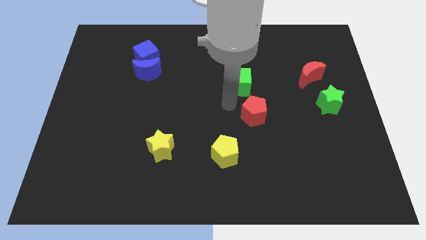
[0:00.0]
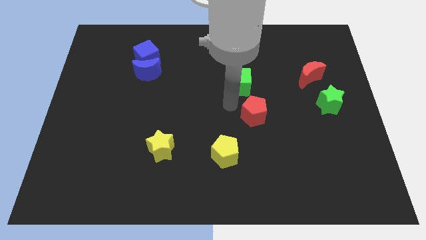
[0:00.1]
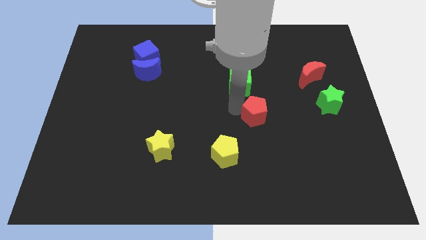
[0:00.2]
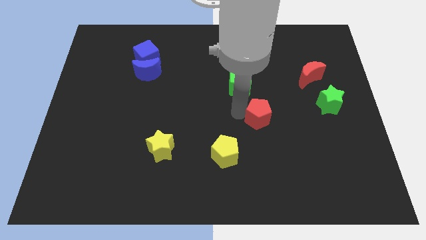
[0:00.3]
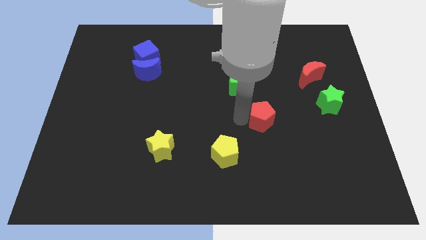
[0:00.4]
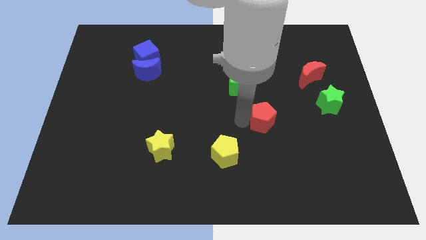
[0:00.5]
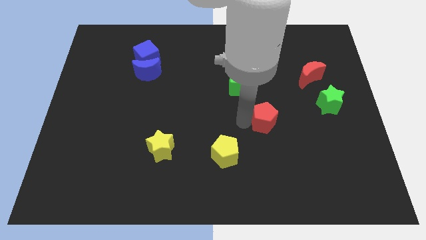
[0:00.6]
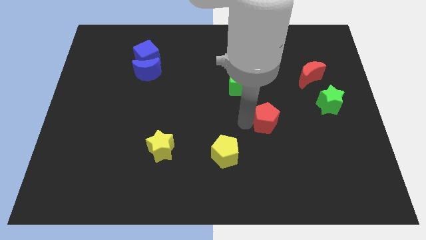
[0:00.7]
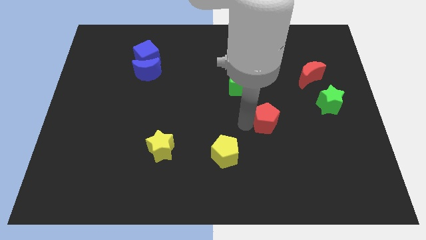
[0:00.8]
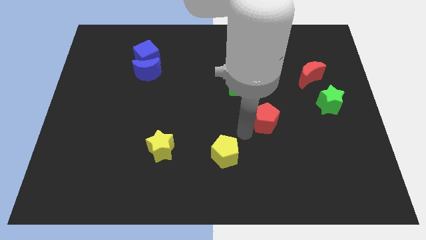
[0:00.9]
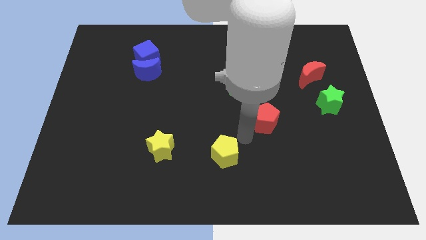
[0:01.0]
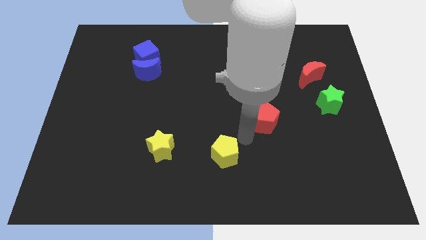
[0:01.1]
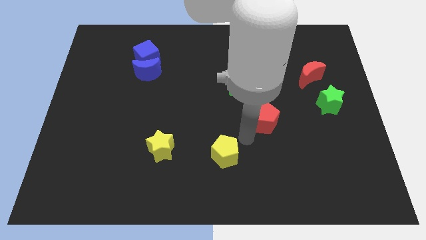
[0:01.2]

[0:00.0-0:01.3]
place the red pentagon diagonal to the yellow pentagon

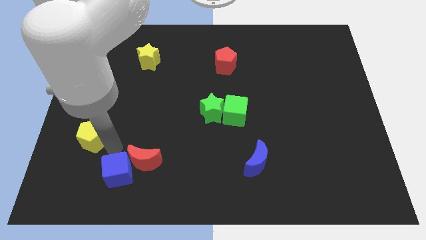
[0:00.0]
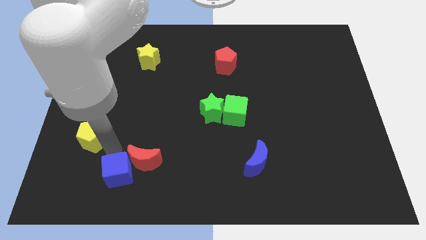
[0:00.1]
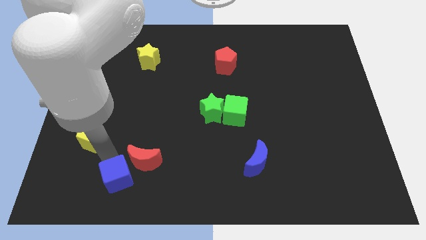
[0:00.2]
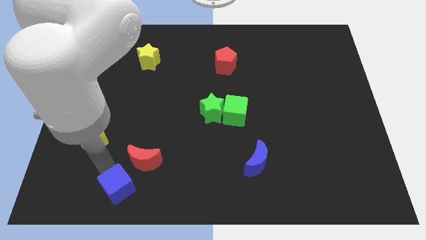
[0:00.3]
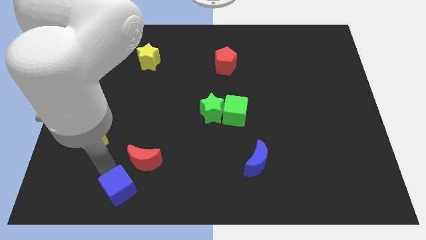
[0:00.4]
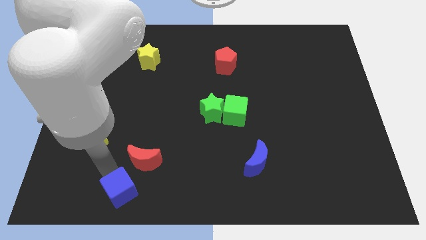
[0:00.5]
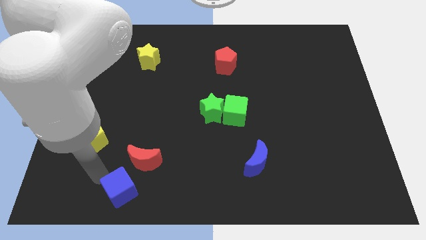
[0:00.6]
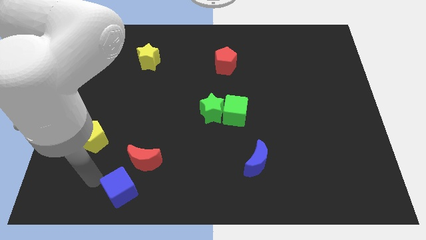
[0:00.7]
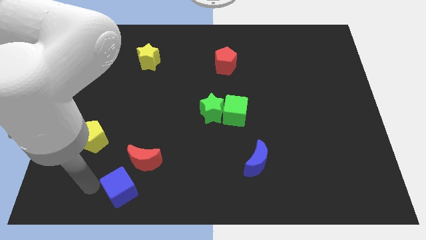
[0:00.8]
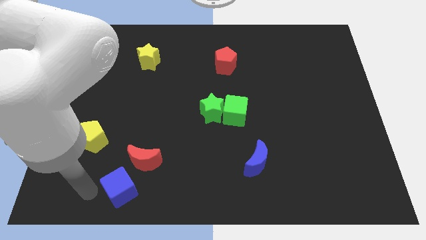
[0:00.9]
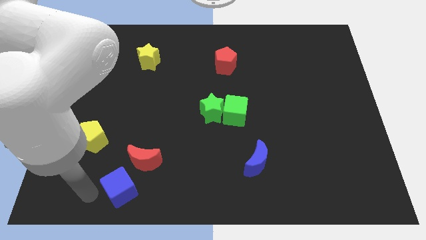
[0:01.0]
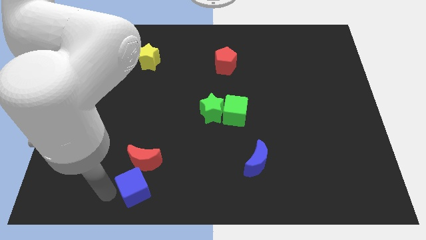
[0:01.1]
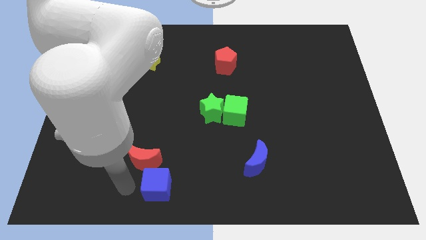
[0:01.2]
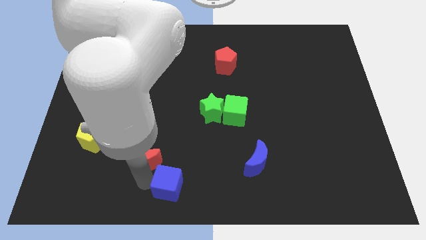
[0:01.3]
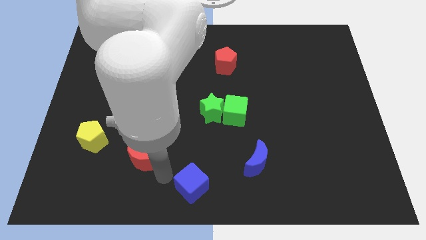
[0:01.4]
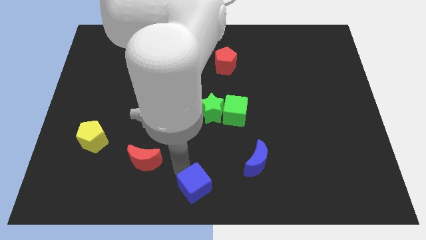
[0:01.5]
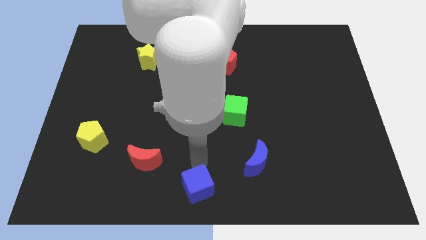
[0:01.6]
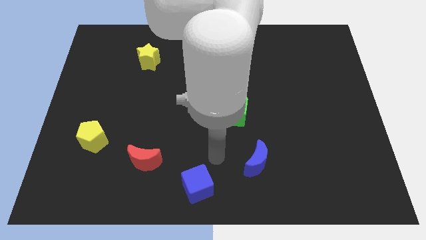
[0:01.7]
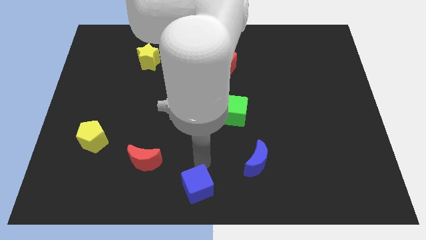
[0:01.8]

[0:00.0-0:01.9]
place the blue cube to the bottom center of the board

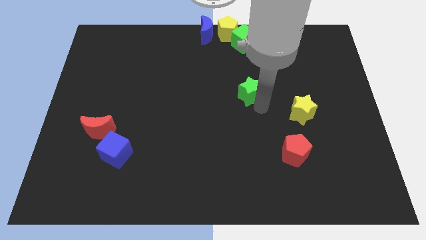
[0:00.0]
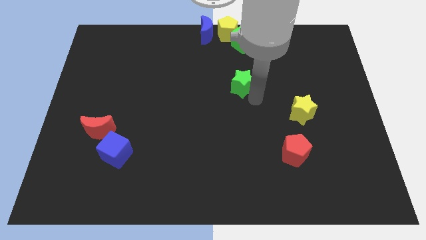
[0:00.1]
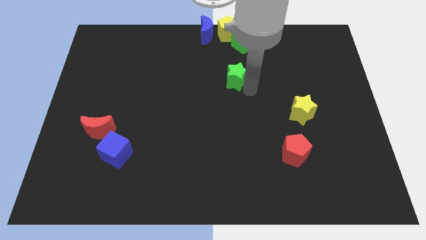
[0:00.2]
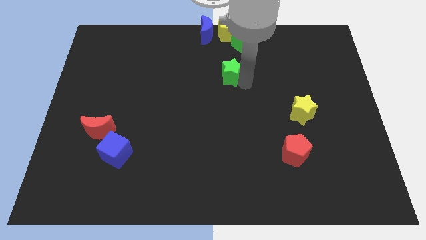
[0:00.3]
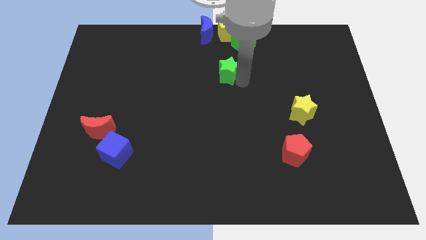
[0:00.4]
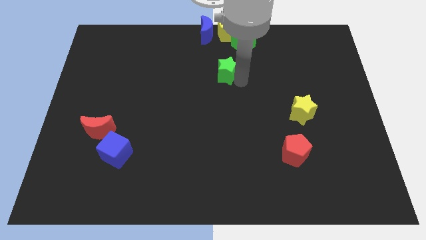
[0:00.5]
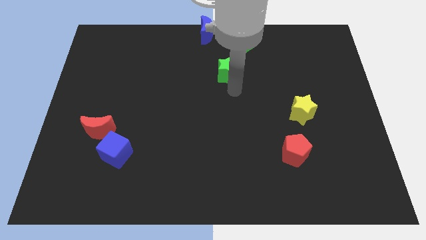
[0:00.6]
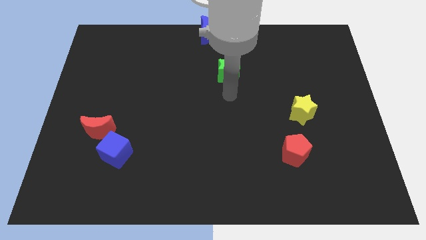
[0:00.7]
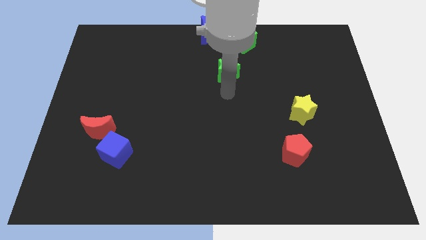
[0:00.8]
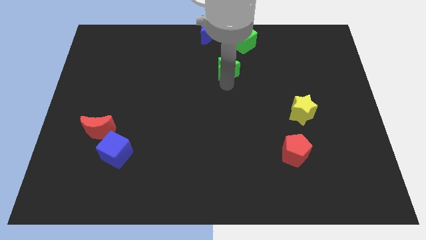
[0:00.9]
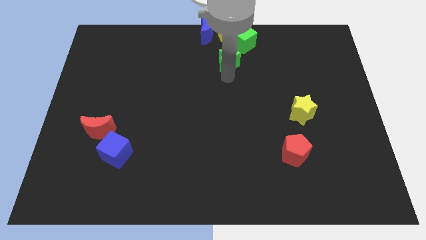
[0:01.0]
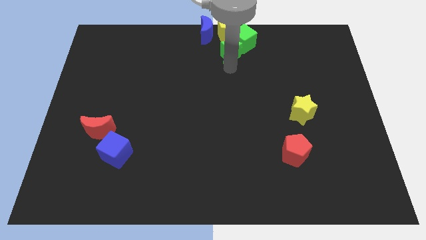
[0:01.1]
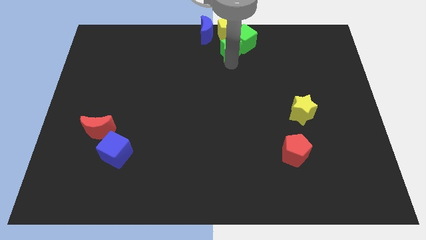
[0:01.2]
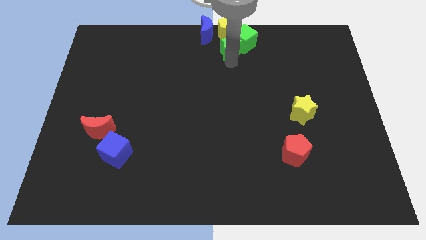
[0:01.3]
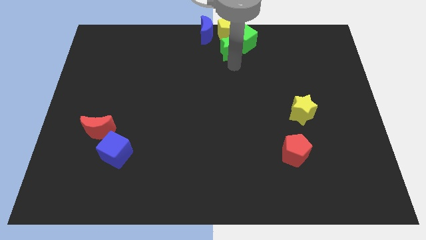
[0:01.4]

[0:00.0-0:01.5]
attach the green star to the green cube

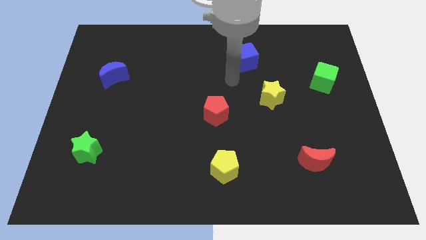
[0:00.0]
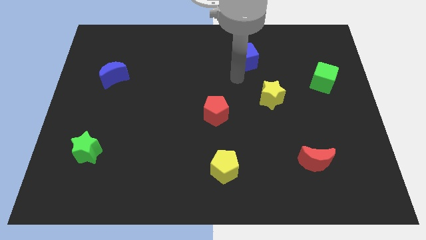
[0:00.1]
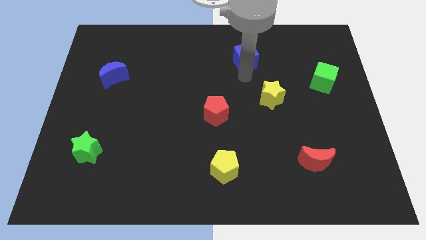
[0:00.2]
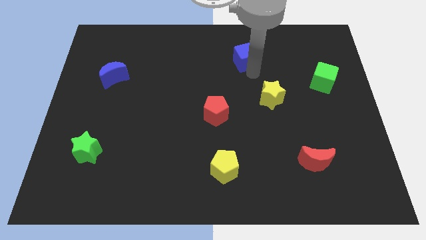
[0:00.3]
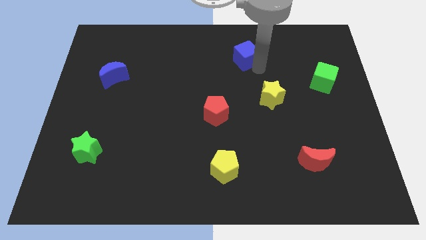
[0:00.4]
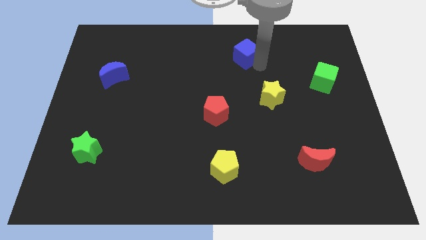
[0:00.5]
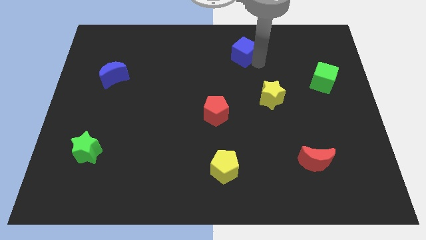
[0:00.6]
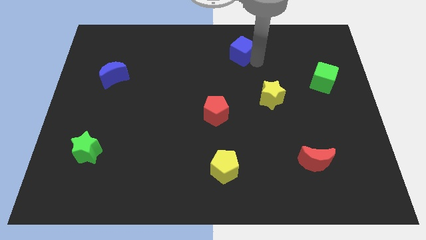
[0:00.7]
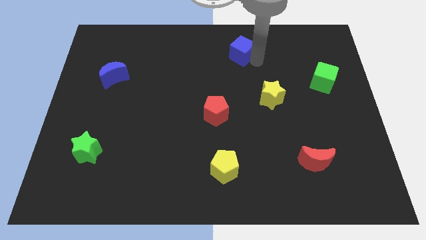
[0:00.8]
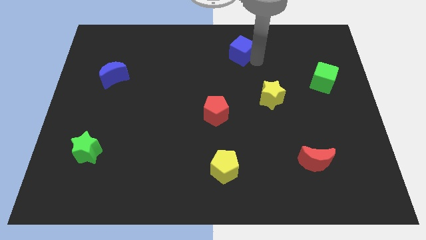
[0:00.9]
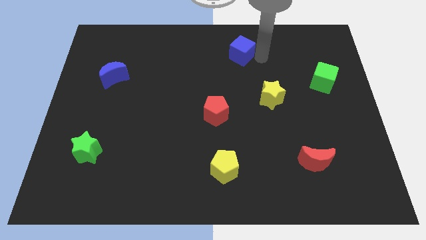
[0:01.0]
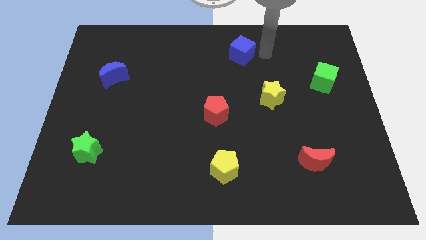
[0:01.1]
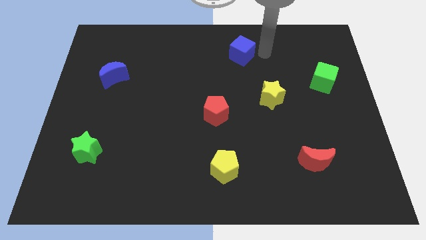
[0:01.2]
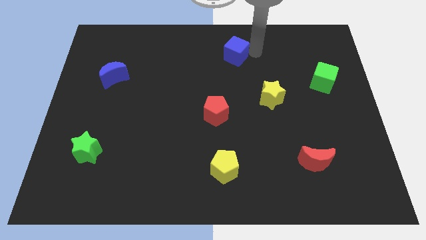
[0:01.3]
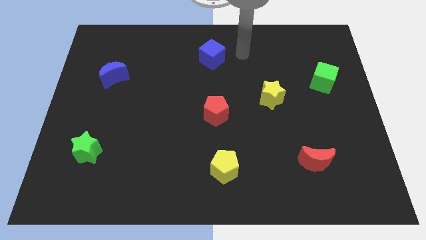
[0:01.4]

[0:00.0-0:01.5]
move the blue cube to the top of the board

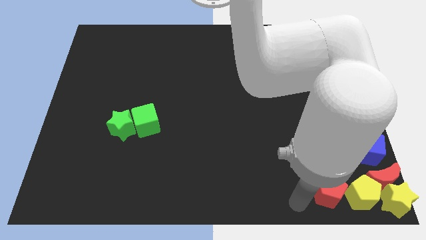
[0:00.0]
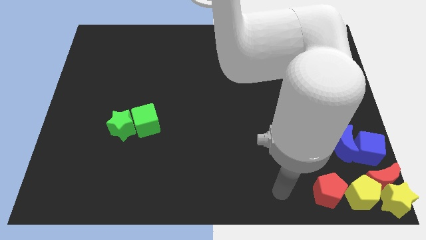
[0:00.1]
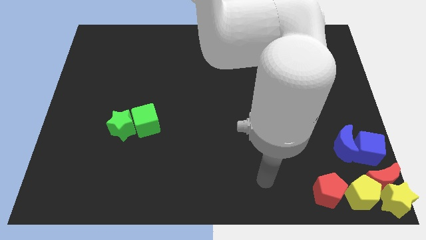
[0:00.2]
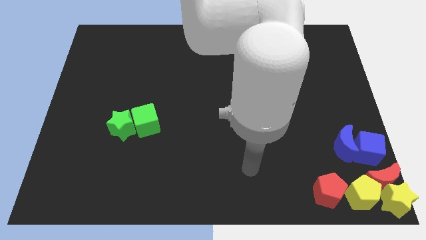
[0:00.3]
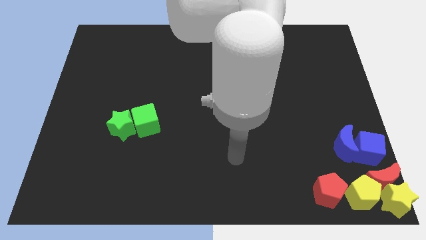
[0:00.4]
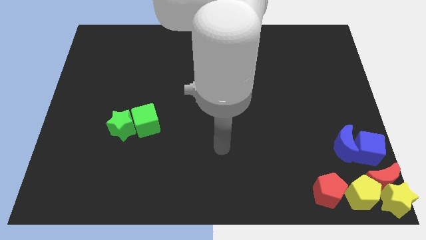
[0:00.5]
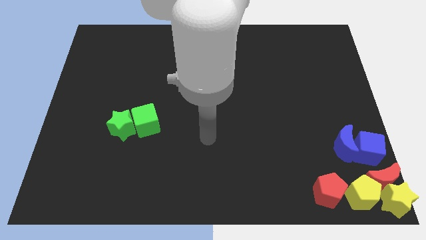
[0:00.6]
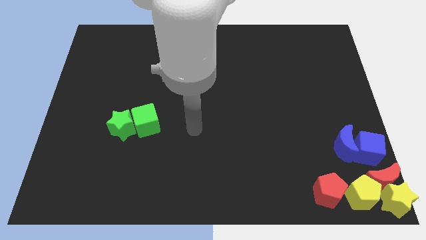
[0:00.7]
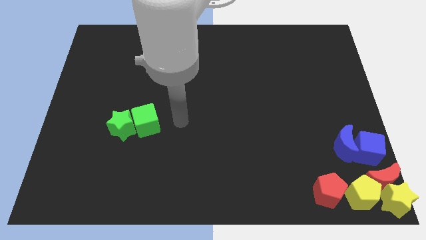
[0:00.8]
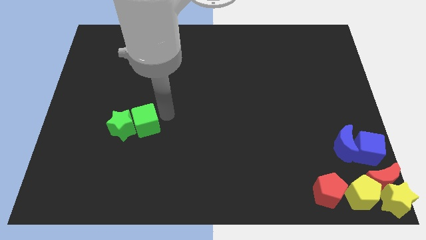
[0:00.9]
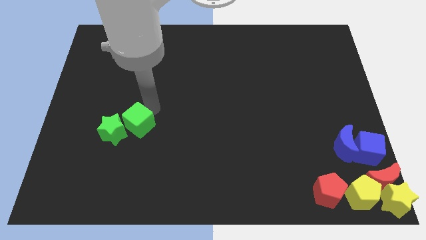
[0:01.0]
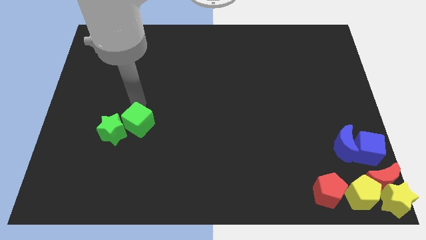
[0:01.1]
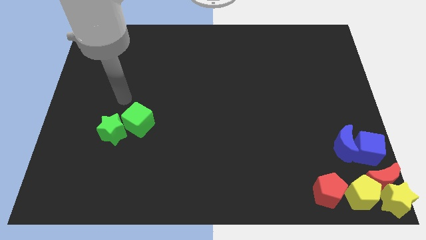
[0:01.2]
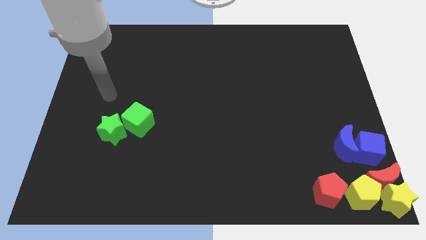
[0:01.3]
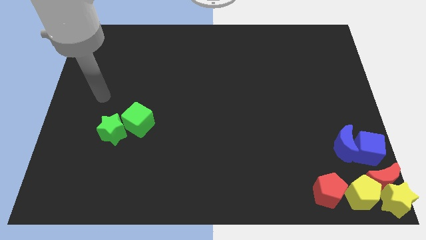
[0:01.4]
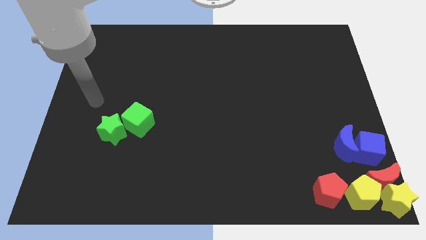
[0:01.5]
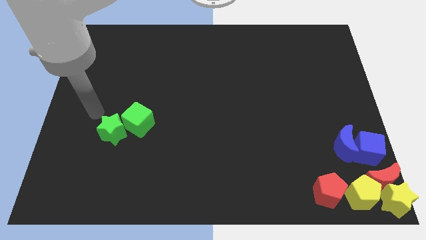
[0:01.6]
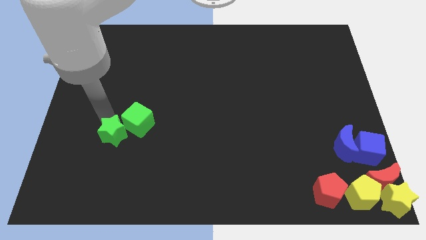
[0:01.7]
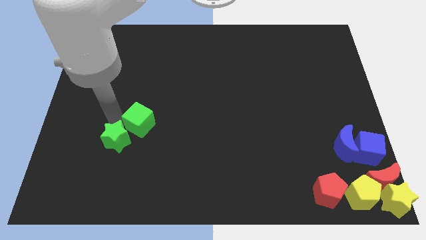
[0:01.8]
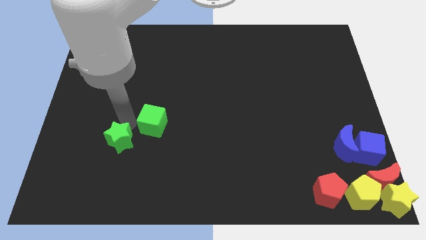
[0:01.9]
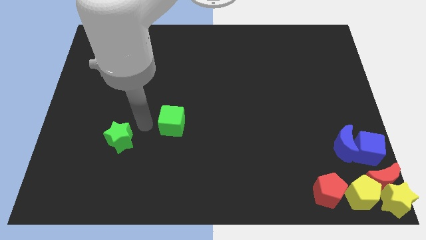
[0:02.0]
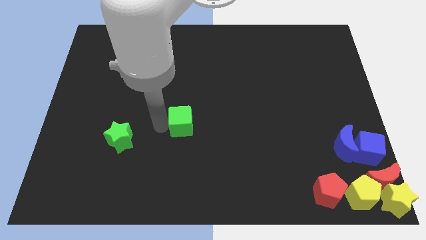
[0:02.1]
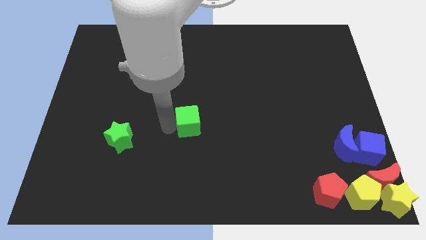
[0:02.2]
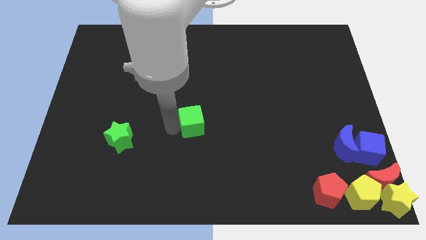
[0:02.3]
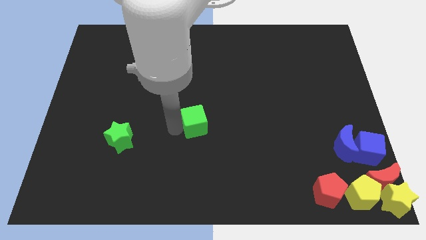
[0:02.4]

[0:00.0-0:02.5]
separate green cube away from green star

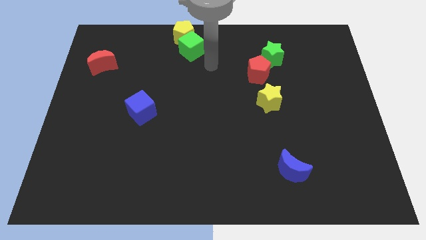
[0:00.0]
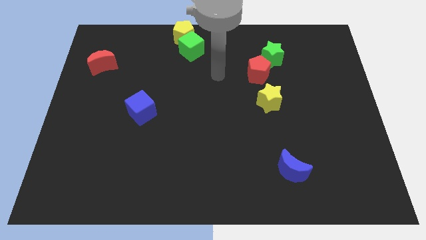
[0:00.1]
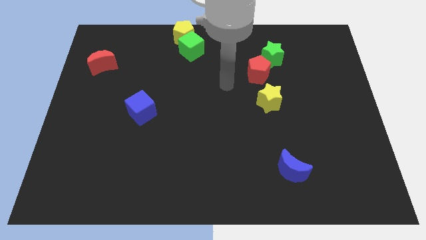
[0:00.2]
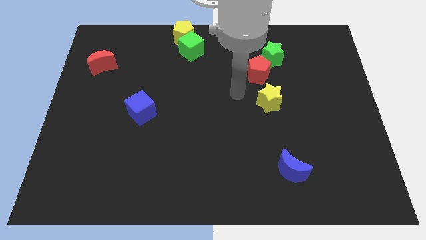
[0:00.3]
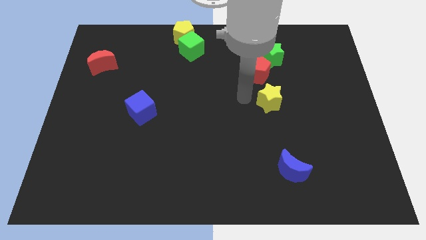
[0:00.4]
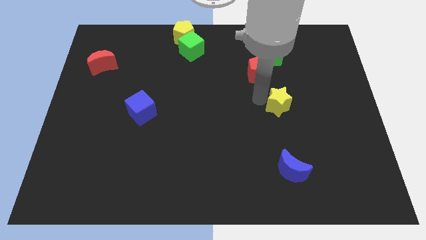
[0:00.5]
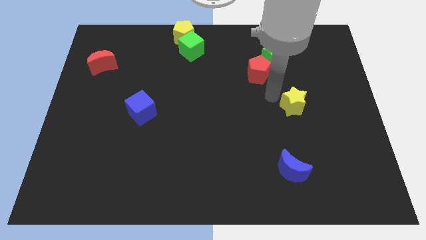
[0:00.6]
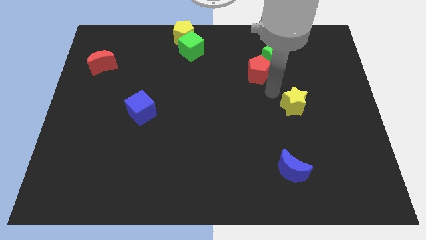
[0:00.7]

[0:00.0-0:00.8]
slightly push the yellow star to the right side
